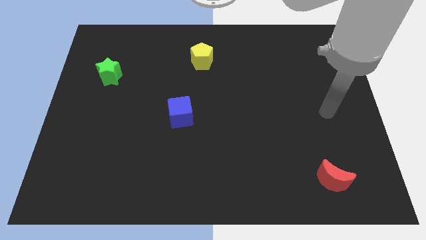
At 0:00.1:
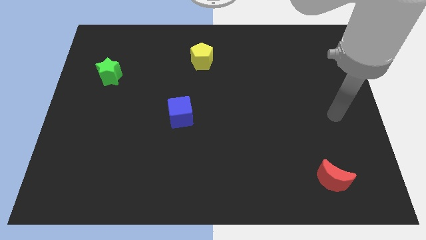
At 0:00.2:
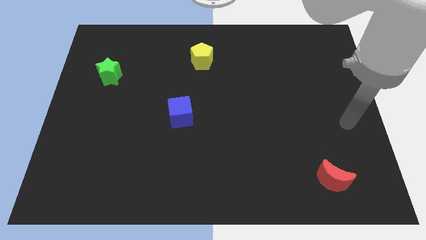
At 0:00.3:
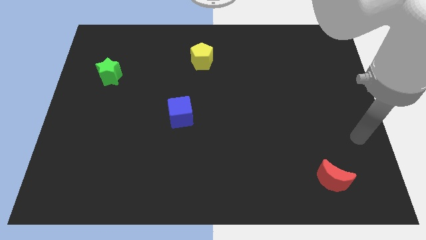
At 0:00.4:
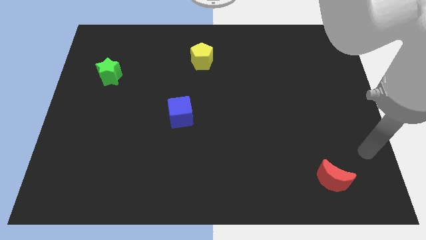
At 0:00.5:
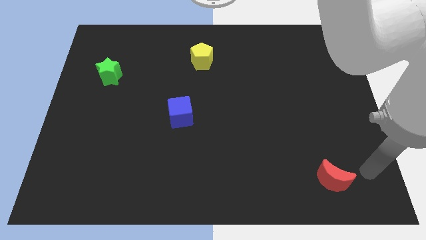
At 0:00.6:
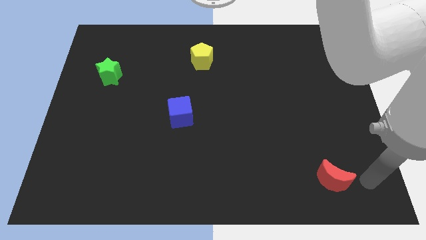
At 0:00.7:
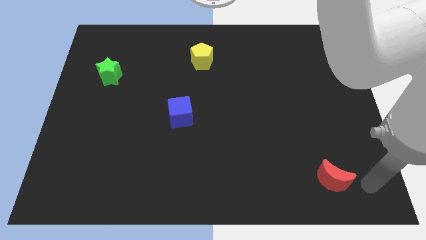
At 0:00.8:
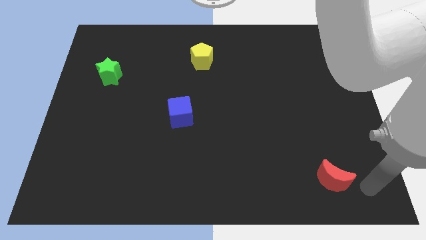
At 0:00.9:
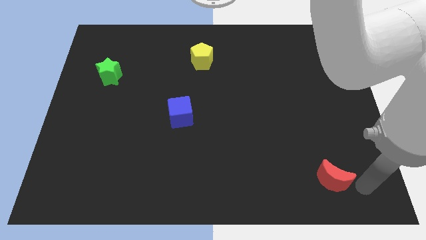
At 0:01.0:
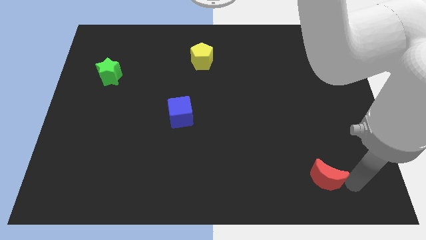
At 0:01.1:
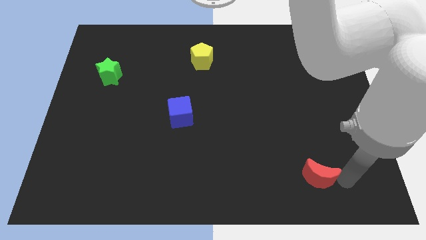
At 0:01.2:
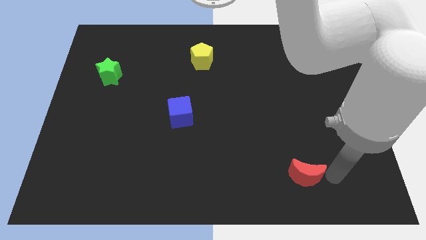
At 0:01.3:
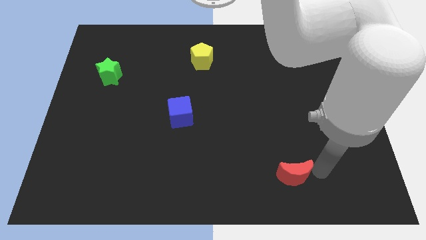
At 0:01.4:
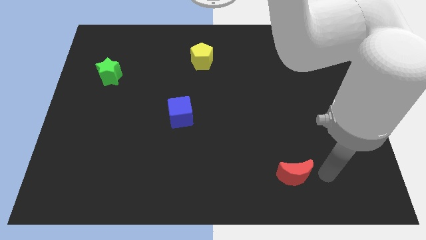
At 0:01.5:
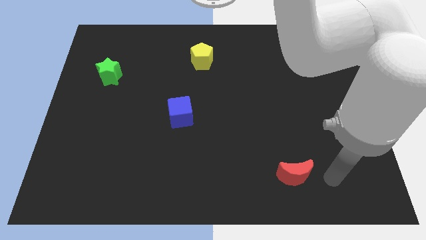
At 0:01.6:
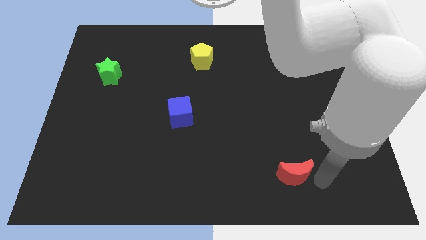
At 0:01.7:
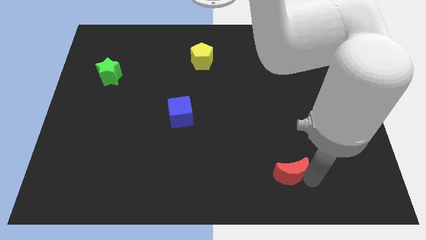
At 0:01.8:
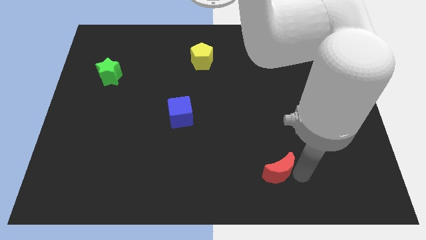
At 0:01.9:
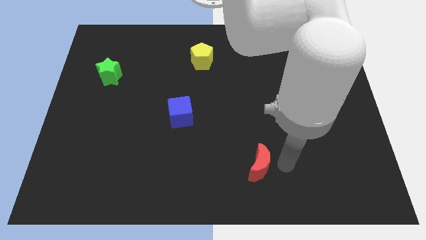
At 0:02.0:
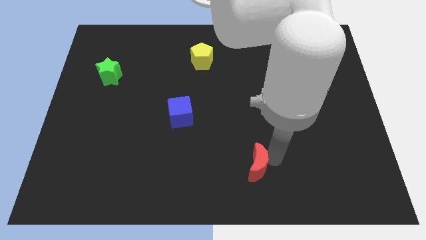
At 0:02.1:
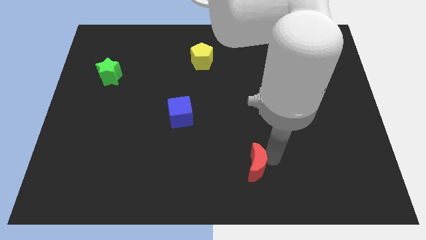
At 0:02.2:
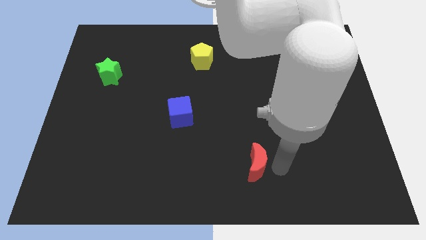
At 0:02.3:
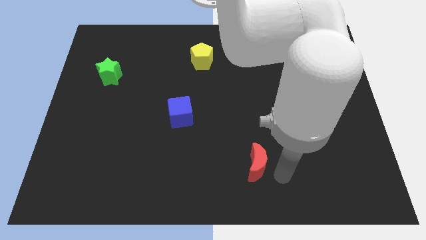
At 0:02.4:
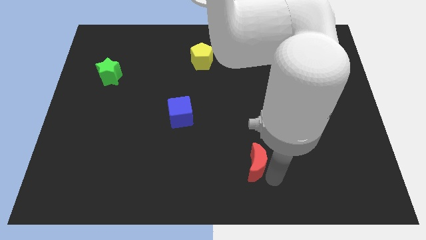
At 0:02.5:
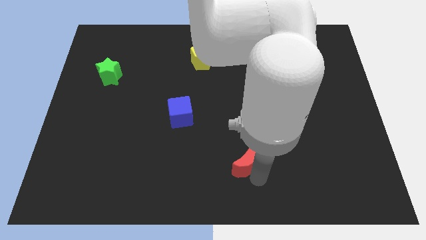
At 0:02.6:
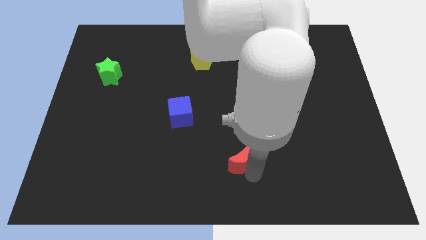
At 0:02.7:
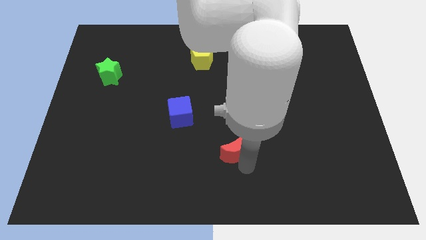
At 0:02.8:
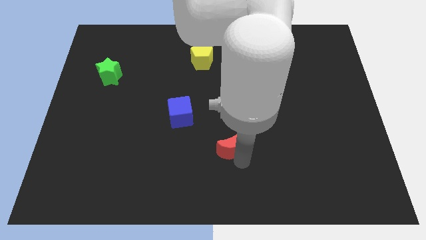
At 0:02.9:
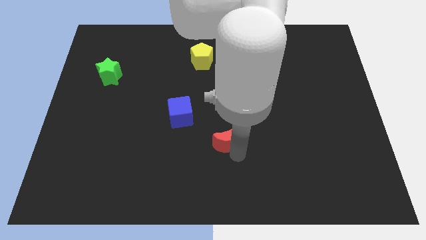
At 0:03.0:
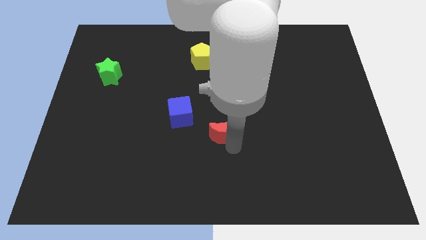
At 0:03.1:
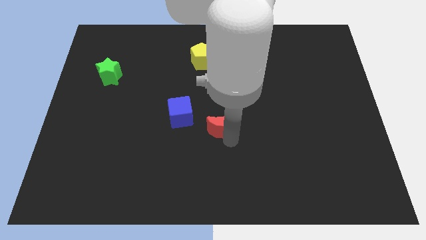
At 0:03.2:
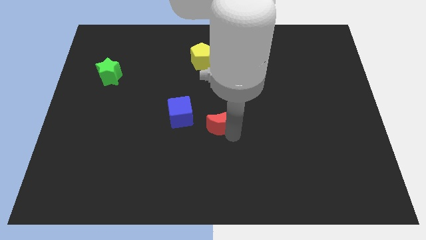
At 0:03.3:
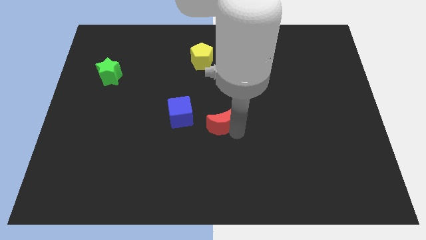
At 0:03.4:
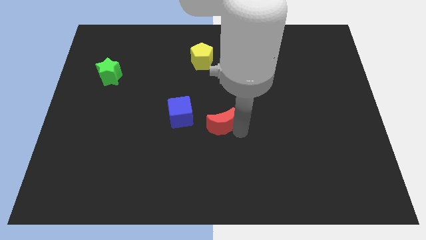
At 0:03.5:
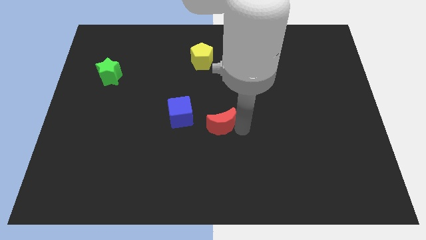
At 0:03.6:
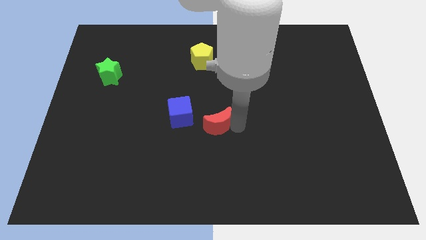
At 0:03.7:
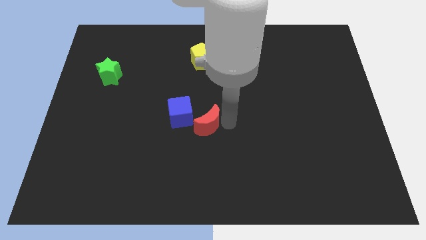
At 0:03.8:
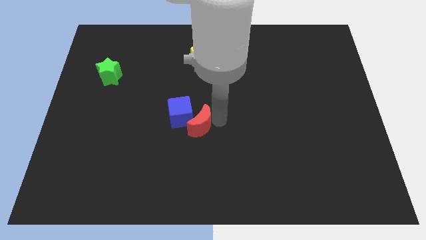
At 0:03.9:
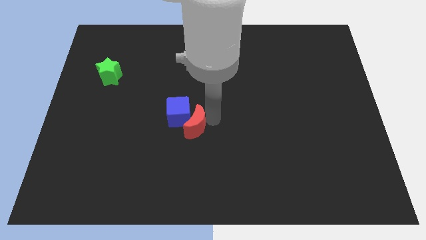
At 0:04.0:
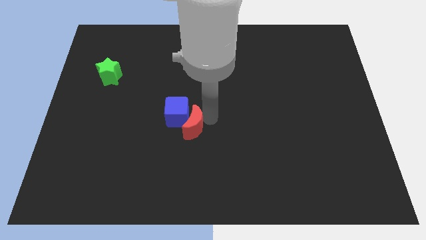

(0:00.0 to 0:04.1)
push the red moon next to the blue cube

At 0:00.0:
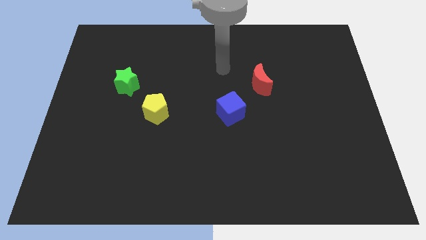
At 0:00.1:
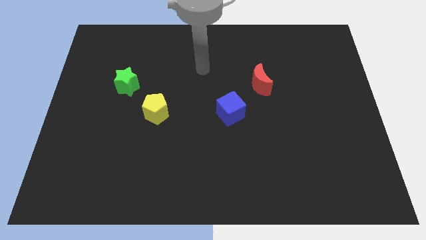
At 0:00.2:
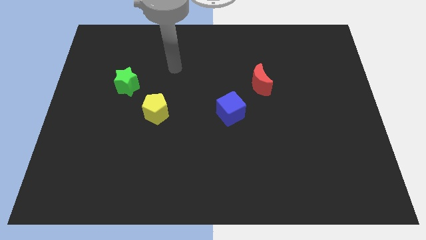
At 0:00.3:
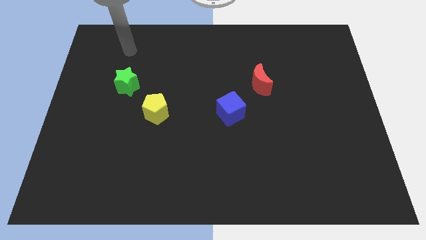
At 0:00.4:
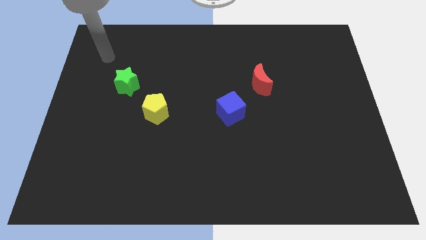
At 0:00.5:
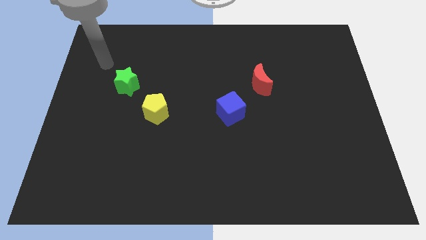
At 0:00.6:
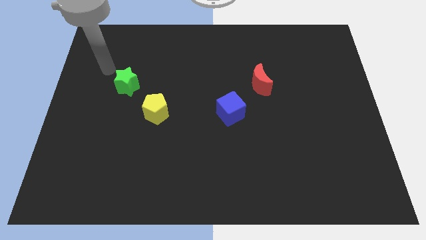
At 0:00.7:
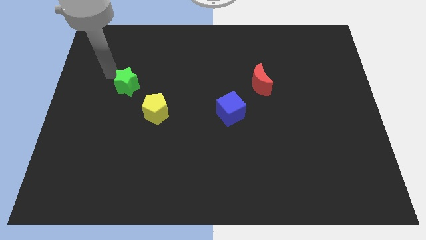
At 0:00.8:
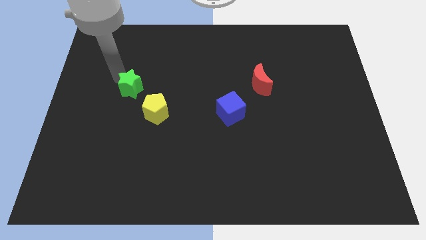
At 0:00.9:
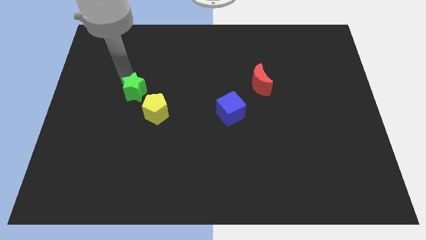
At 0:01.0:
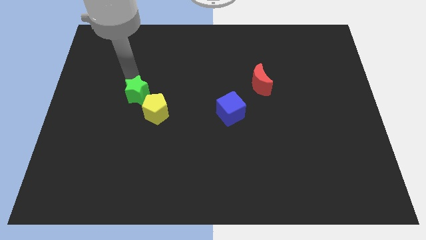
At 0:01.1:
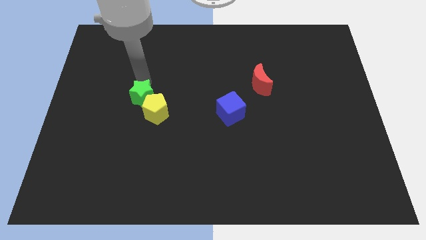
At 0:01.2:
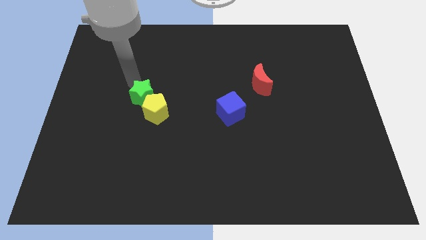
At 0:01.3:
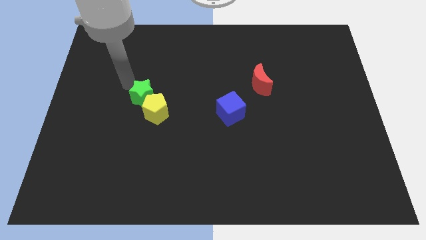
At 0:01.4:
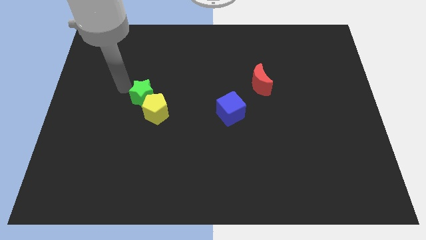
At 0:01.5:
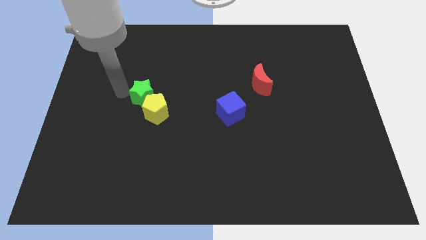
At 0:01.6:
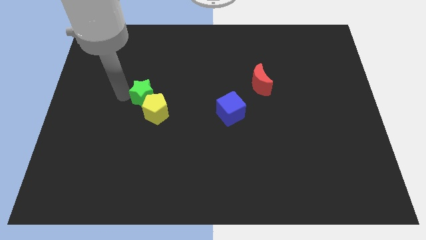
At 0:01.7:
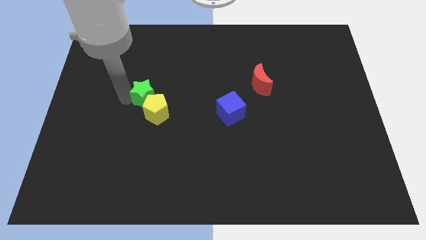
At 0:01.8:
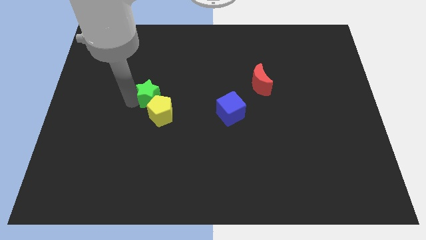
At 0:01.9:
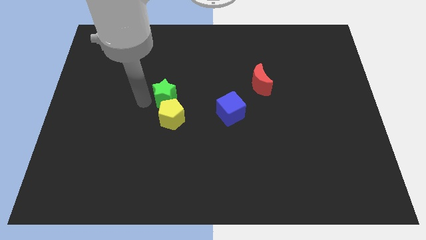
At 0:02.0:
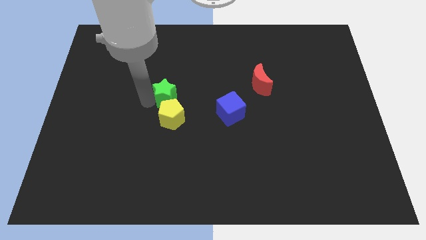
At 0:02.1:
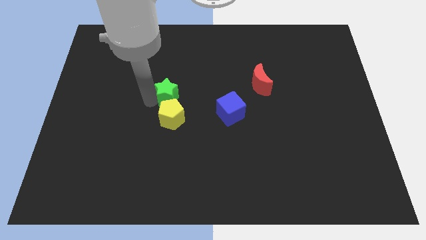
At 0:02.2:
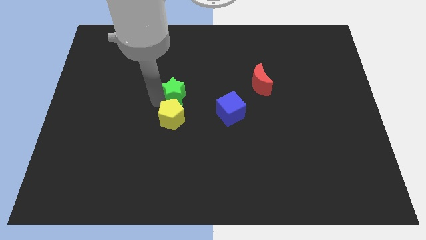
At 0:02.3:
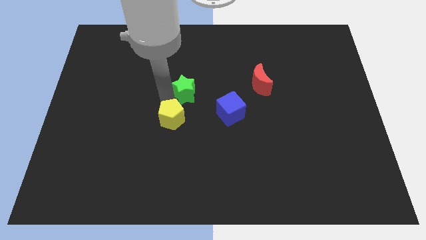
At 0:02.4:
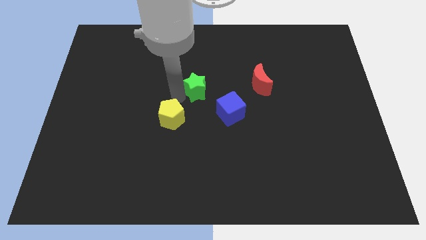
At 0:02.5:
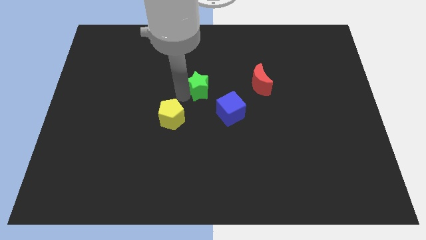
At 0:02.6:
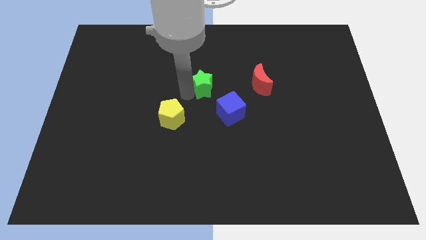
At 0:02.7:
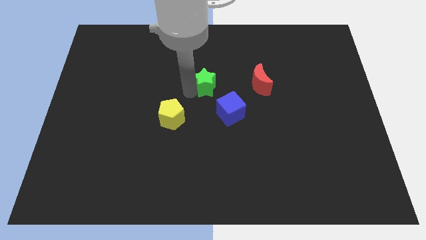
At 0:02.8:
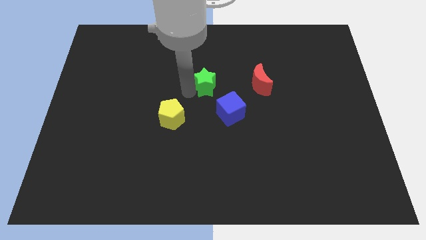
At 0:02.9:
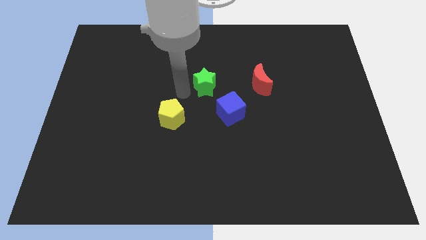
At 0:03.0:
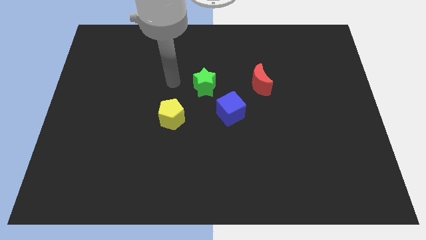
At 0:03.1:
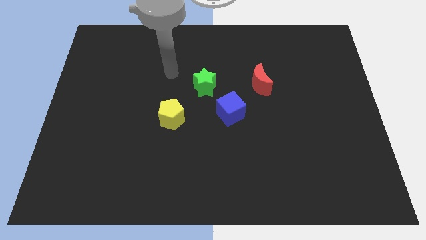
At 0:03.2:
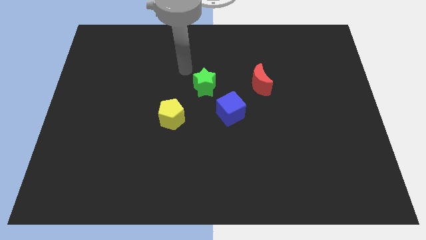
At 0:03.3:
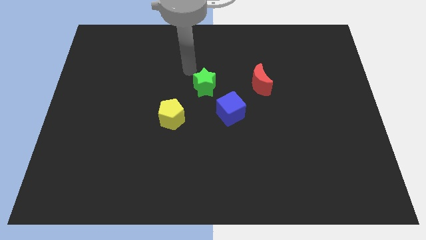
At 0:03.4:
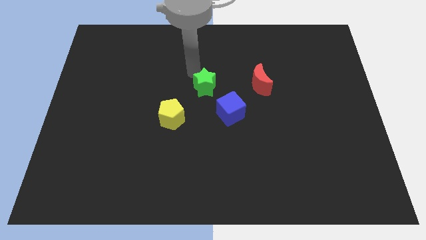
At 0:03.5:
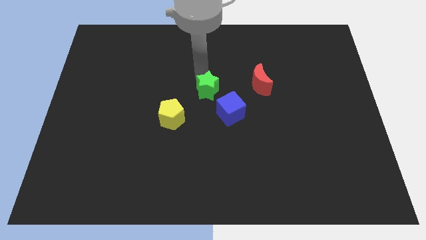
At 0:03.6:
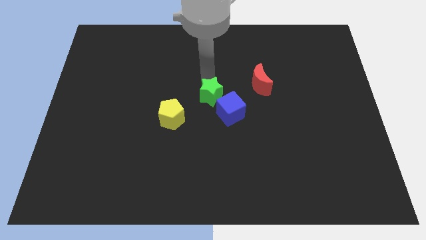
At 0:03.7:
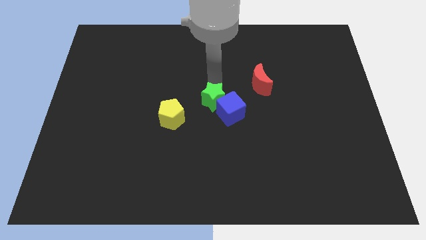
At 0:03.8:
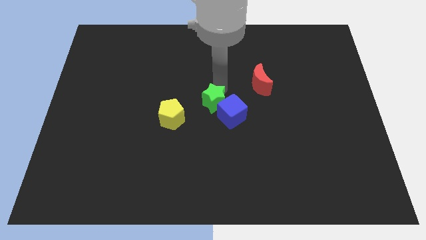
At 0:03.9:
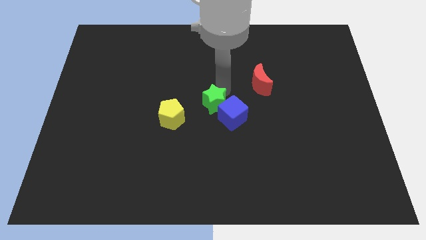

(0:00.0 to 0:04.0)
move the green block to the cube

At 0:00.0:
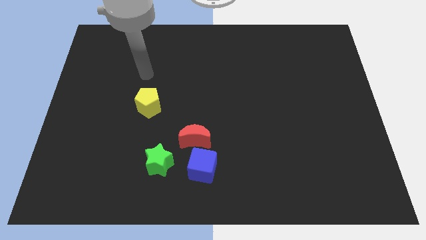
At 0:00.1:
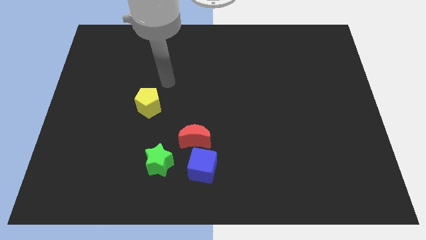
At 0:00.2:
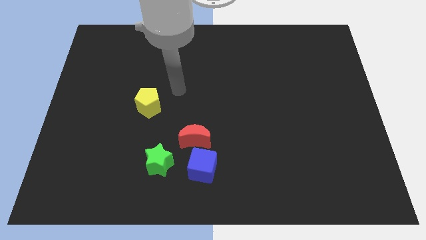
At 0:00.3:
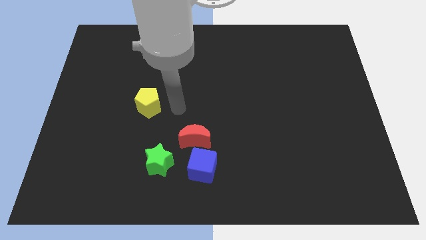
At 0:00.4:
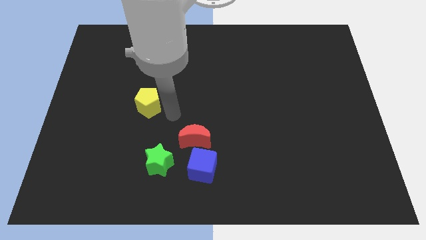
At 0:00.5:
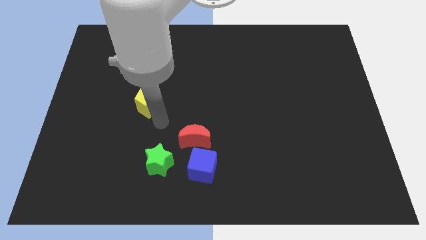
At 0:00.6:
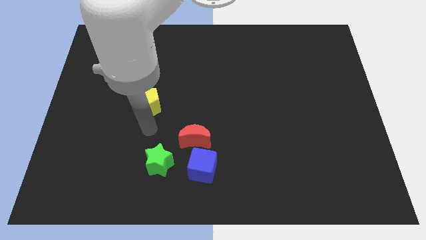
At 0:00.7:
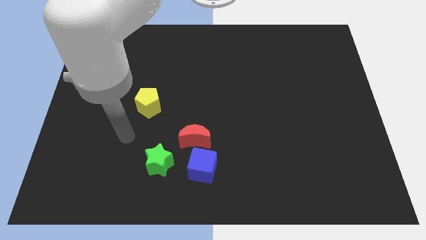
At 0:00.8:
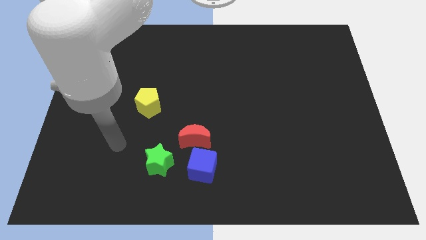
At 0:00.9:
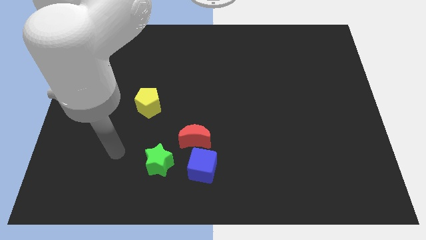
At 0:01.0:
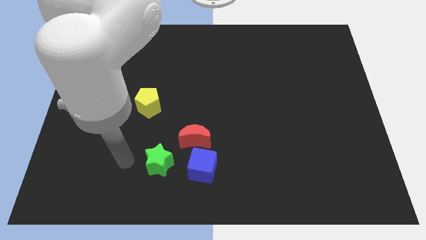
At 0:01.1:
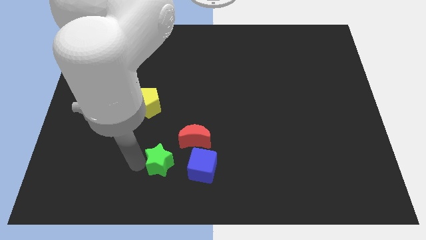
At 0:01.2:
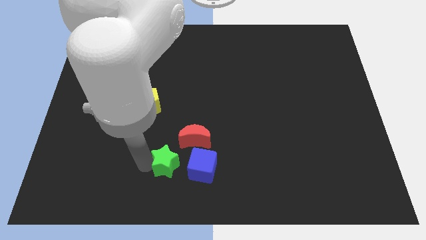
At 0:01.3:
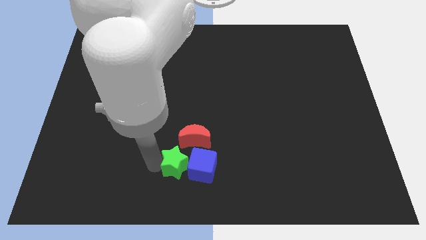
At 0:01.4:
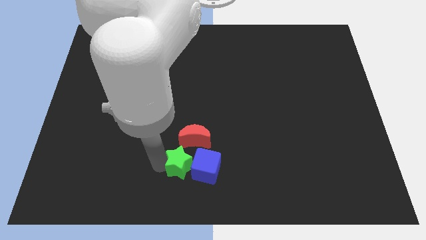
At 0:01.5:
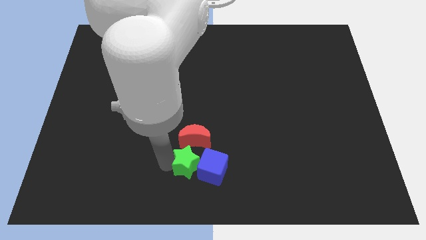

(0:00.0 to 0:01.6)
move the green star next to the blue block
